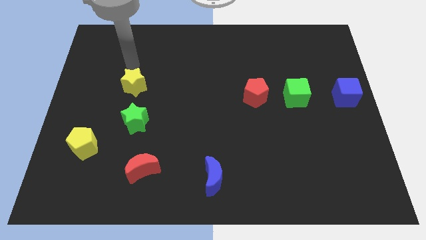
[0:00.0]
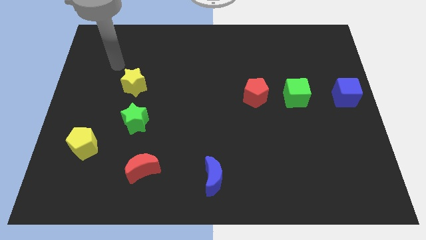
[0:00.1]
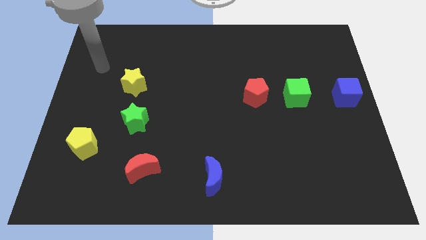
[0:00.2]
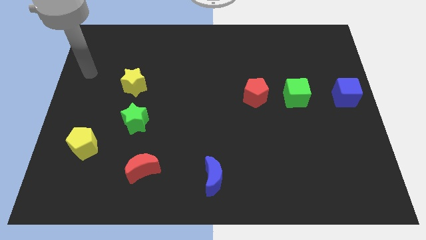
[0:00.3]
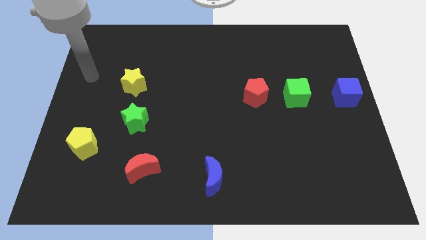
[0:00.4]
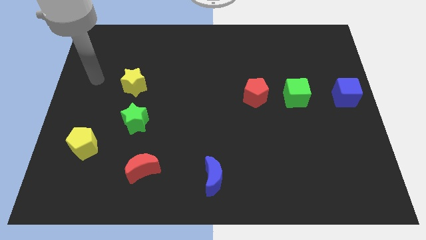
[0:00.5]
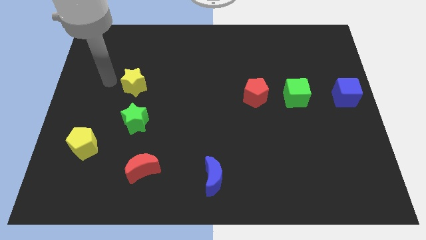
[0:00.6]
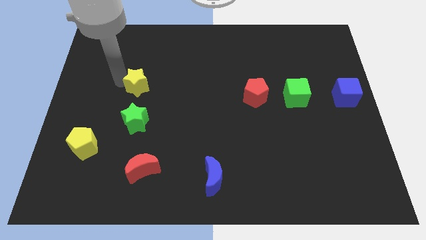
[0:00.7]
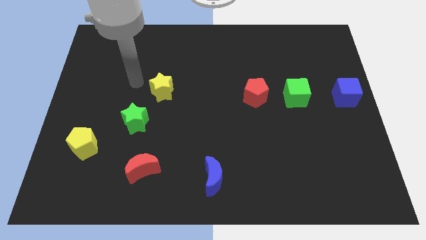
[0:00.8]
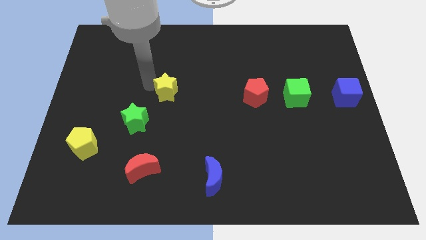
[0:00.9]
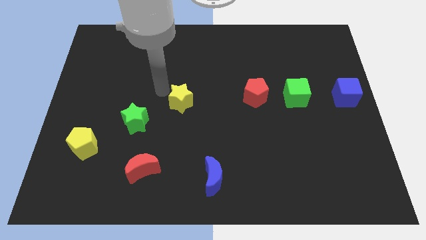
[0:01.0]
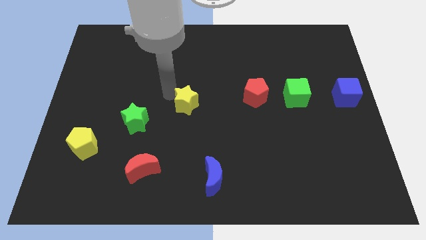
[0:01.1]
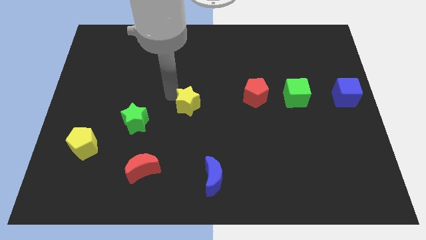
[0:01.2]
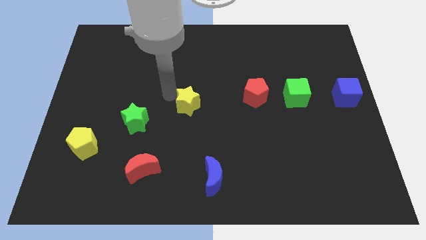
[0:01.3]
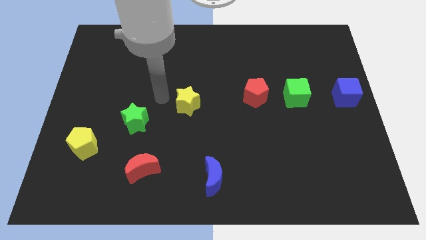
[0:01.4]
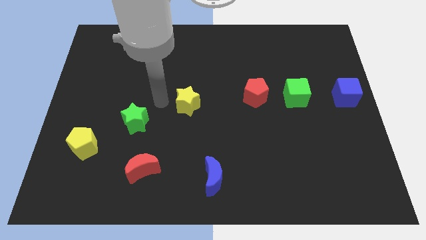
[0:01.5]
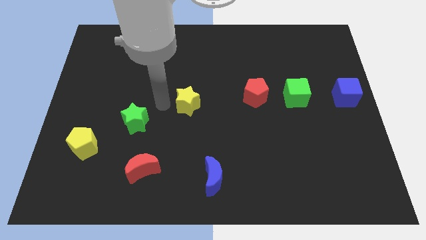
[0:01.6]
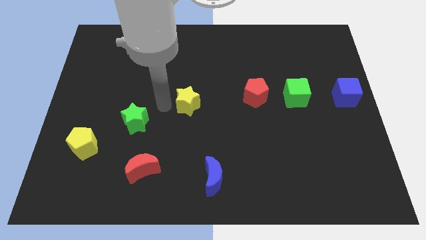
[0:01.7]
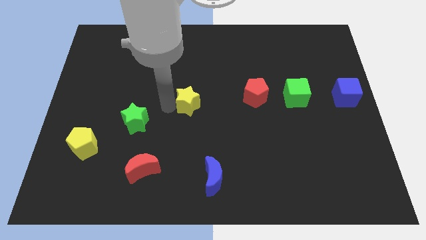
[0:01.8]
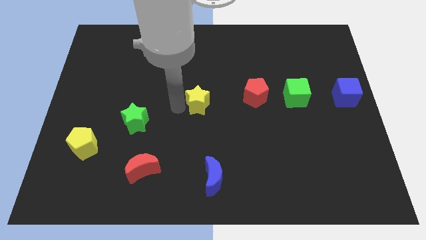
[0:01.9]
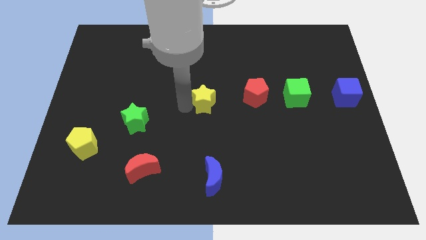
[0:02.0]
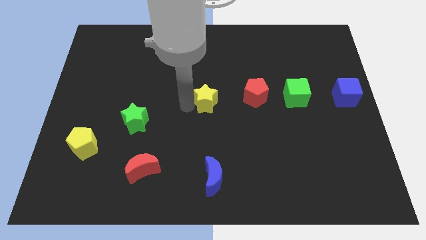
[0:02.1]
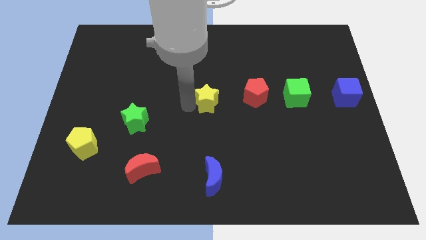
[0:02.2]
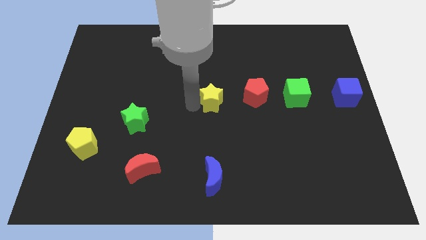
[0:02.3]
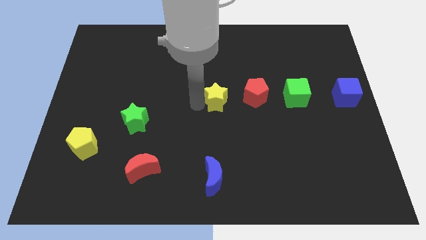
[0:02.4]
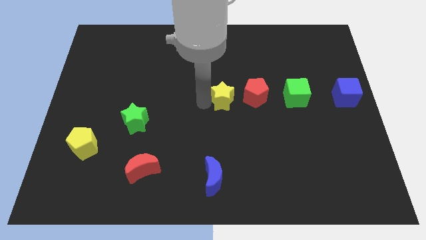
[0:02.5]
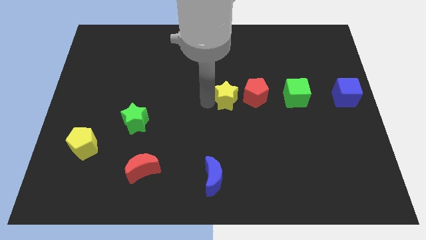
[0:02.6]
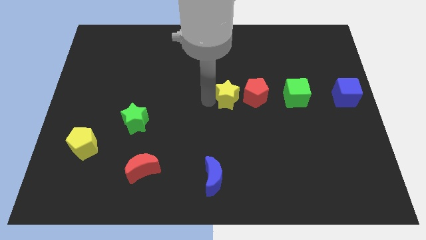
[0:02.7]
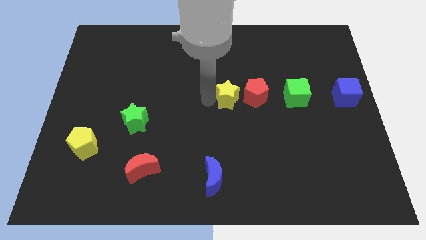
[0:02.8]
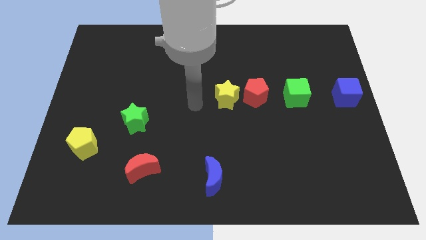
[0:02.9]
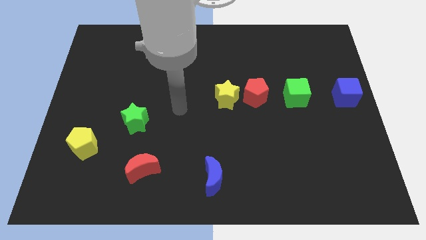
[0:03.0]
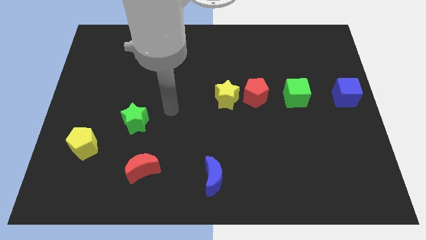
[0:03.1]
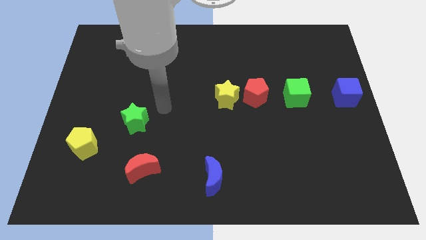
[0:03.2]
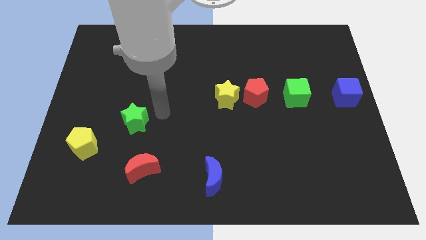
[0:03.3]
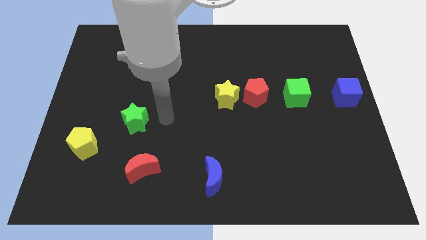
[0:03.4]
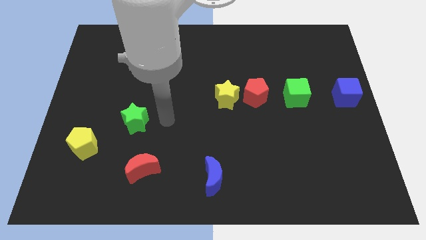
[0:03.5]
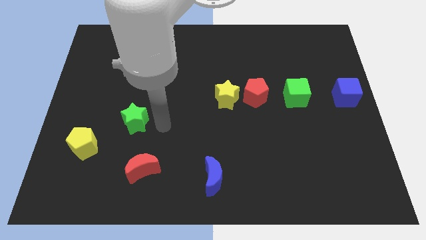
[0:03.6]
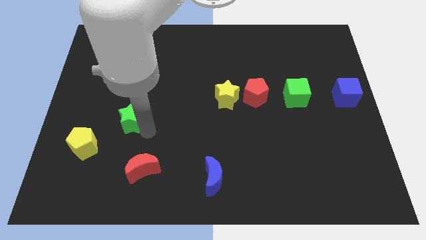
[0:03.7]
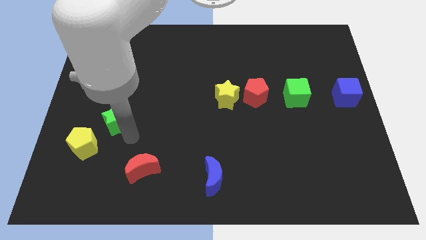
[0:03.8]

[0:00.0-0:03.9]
push the yellow star towards the red pentagon to form a line

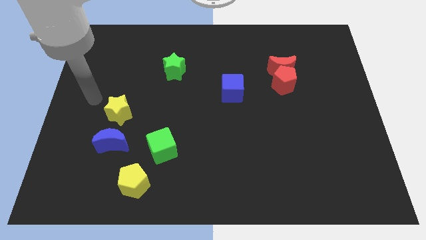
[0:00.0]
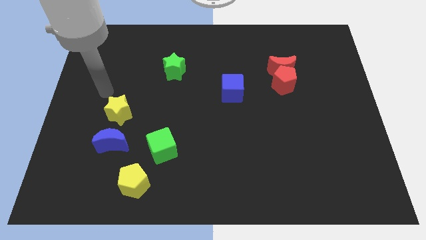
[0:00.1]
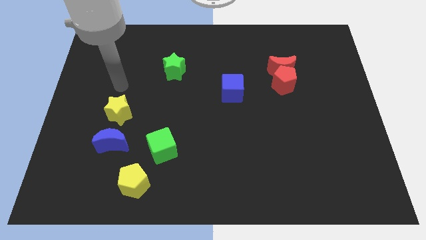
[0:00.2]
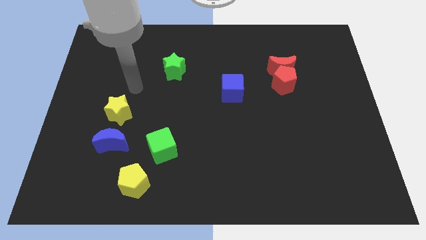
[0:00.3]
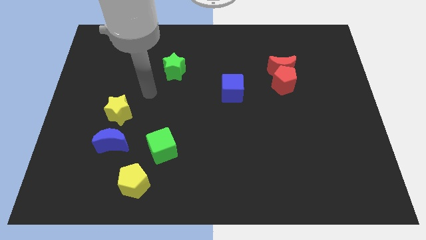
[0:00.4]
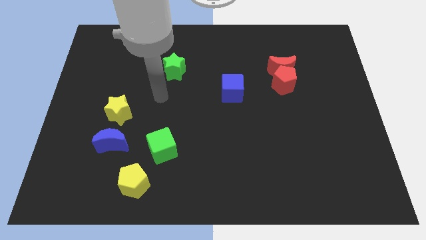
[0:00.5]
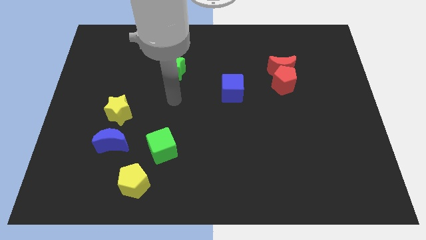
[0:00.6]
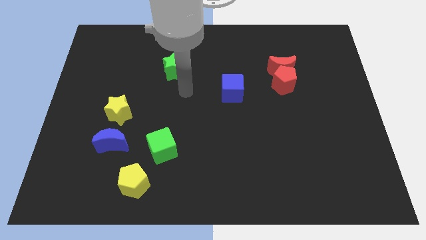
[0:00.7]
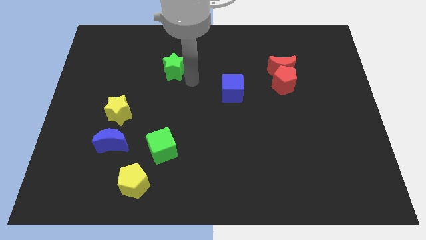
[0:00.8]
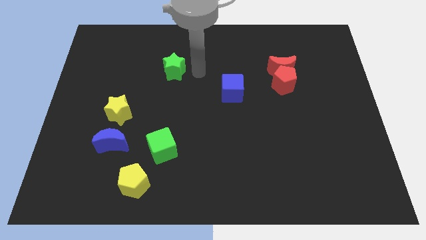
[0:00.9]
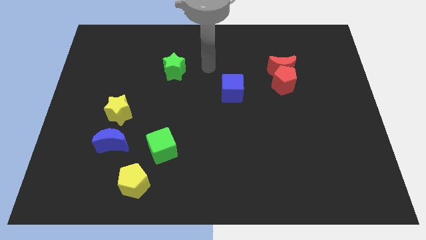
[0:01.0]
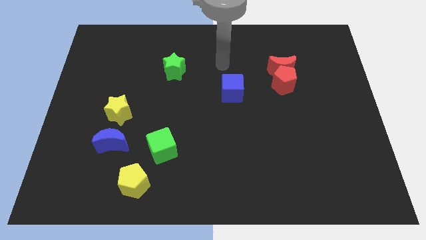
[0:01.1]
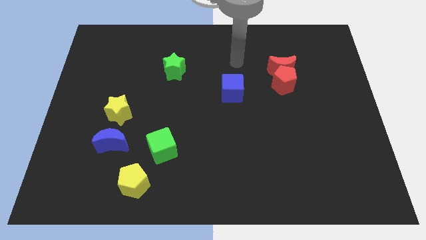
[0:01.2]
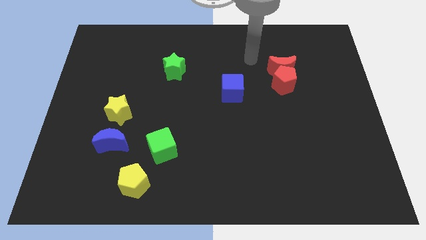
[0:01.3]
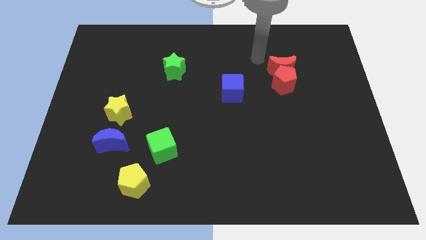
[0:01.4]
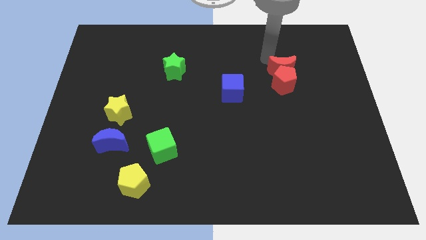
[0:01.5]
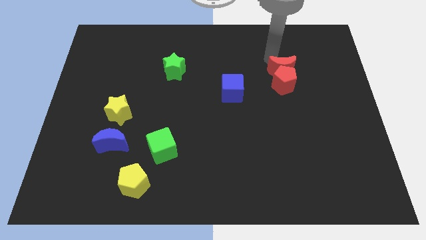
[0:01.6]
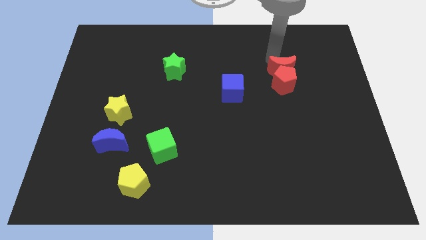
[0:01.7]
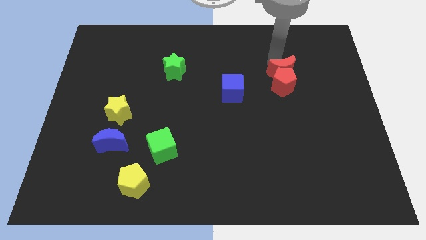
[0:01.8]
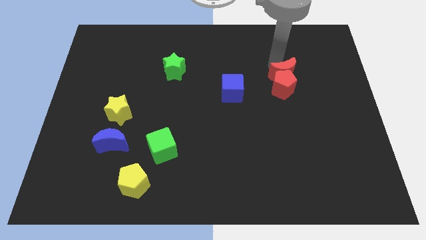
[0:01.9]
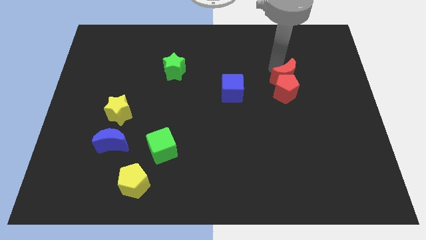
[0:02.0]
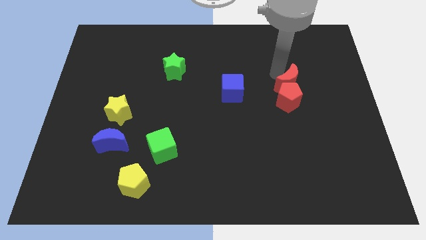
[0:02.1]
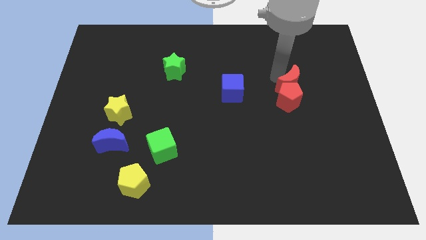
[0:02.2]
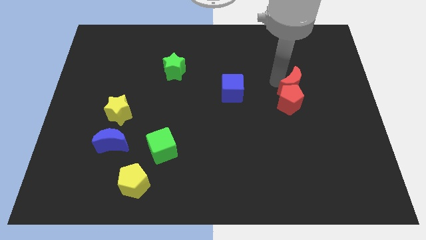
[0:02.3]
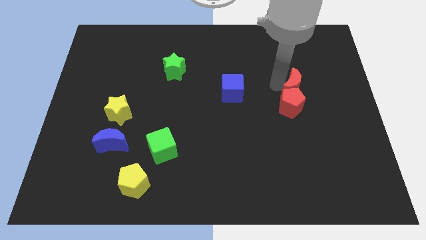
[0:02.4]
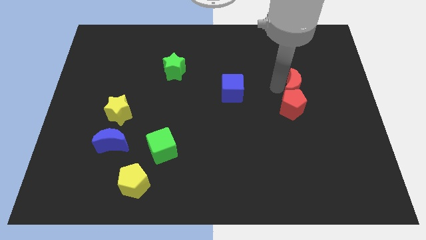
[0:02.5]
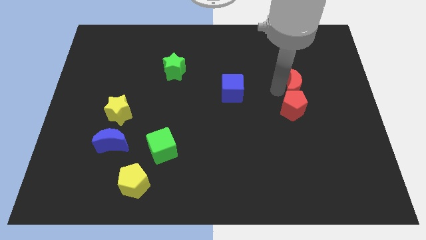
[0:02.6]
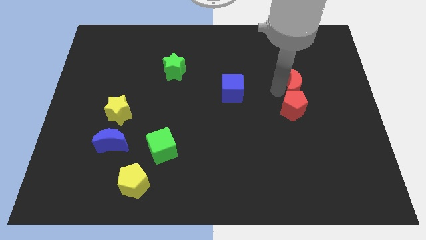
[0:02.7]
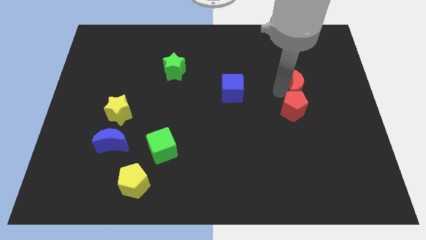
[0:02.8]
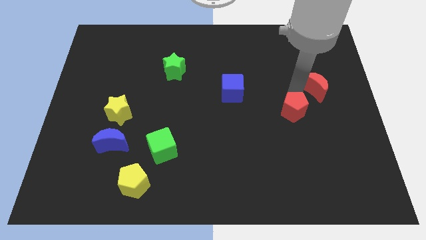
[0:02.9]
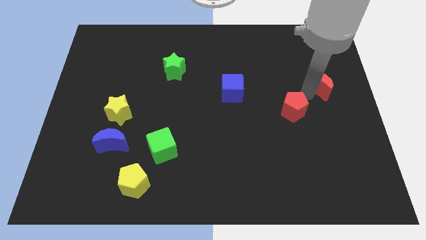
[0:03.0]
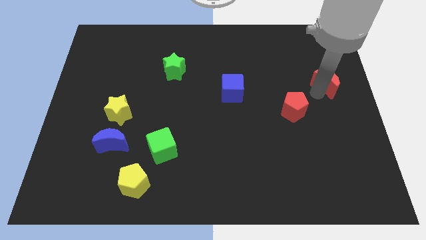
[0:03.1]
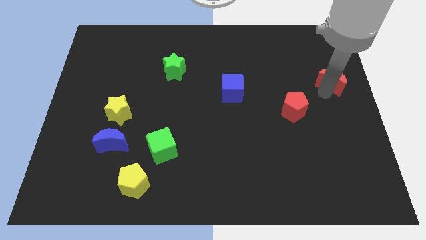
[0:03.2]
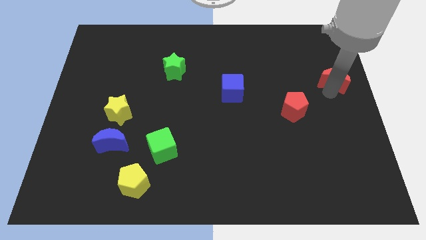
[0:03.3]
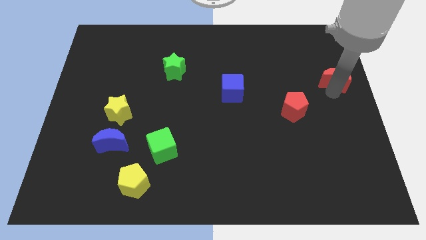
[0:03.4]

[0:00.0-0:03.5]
place the red crescent to the right

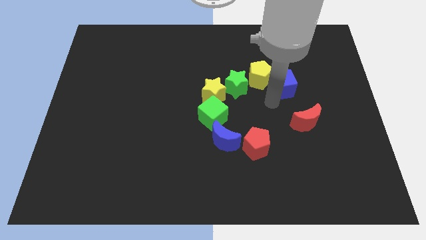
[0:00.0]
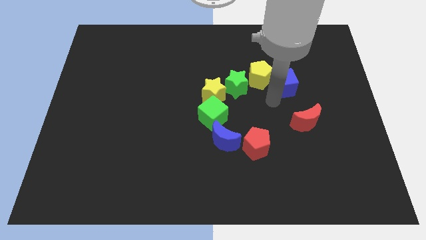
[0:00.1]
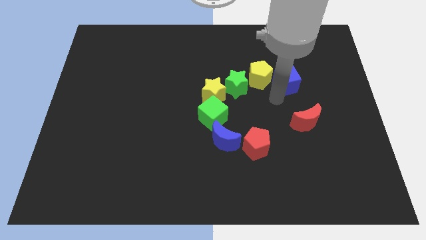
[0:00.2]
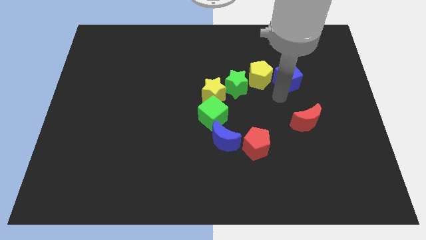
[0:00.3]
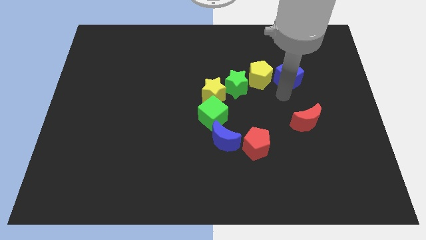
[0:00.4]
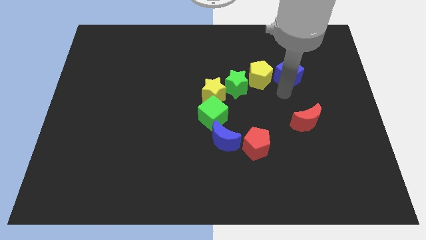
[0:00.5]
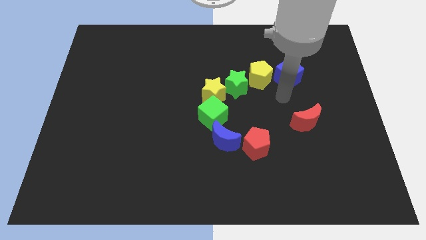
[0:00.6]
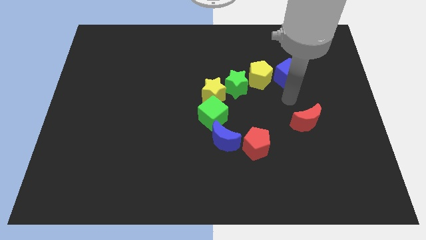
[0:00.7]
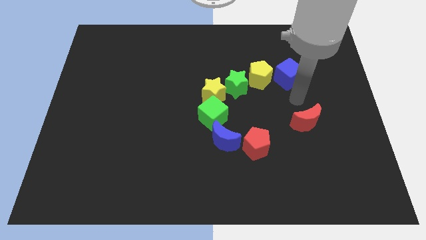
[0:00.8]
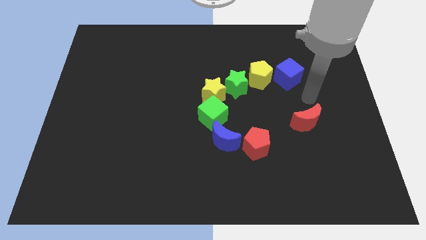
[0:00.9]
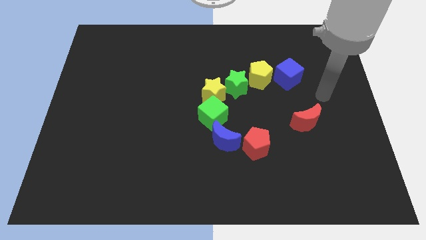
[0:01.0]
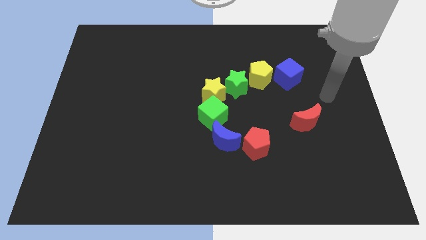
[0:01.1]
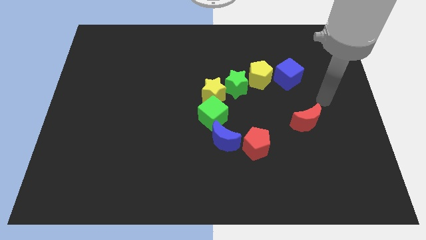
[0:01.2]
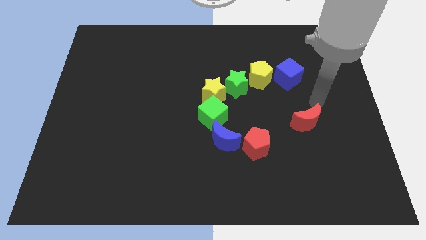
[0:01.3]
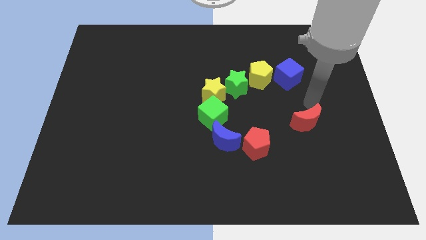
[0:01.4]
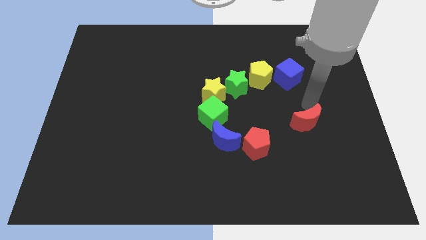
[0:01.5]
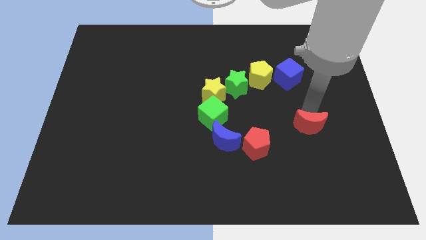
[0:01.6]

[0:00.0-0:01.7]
place the blue cube right to the yellow pentagon
